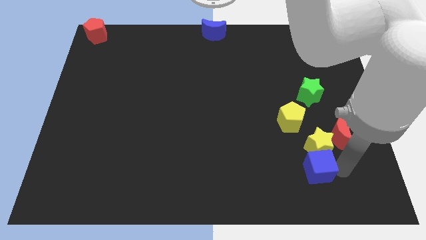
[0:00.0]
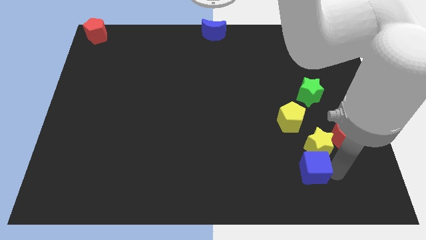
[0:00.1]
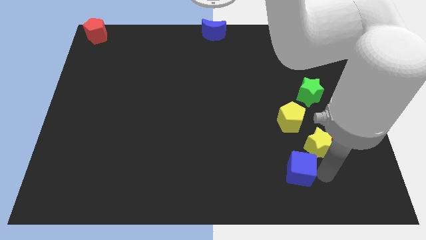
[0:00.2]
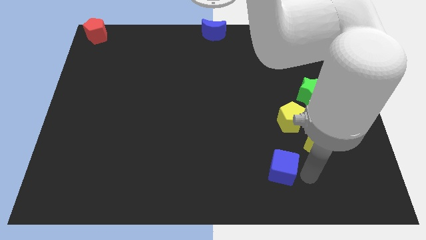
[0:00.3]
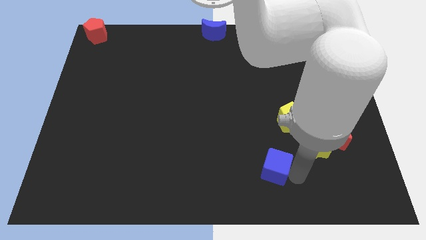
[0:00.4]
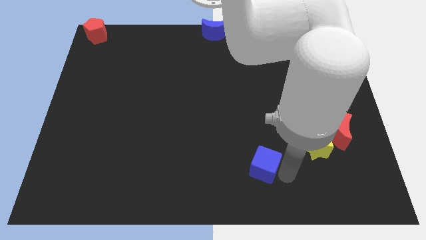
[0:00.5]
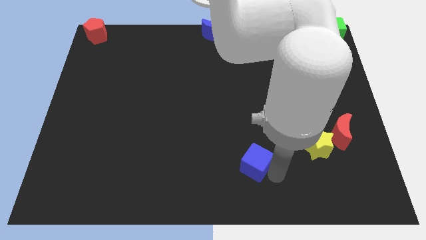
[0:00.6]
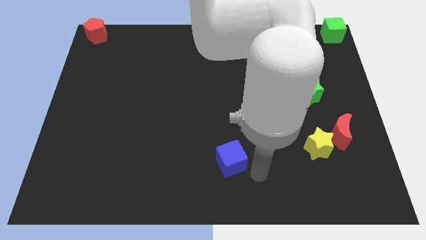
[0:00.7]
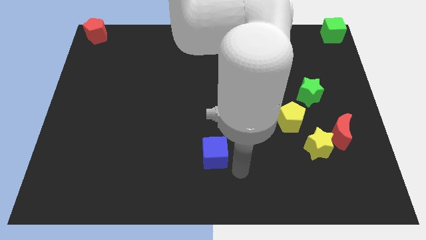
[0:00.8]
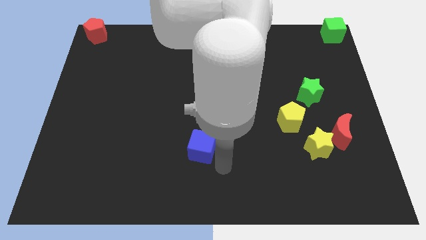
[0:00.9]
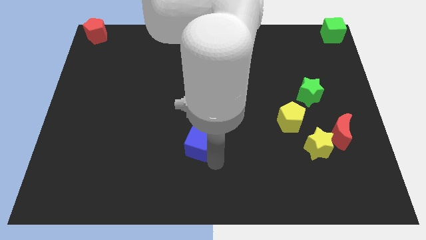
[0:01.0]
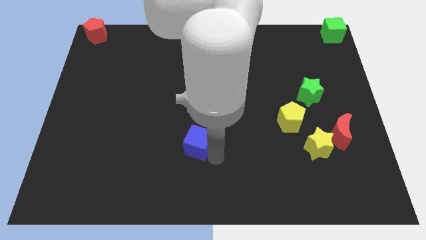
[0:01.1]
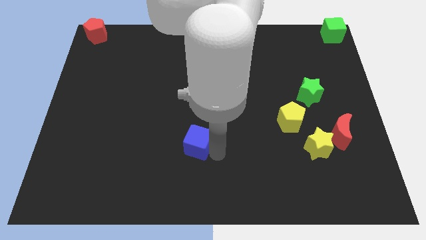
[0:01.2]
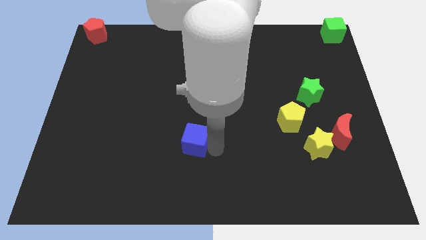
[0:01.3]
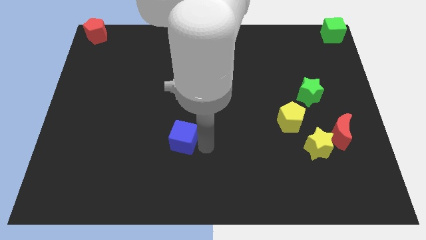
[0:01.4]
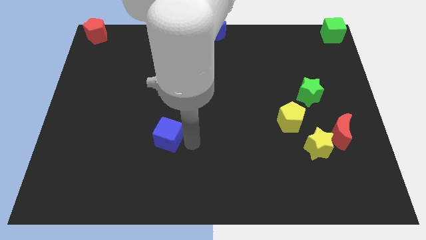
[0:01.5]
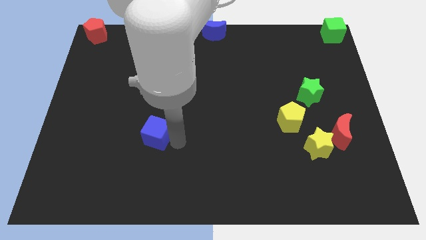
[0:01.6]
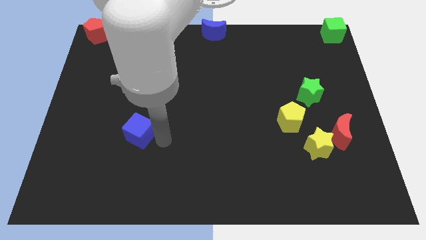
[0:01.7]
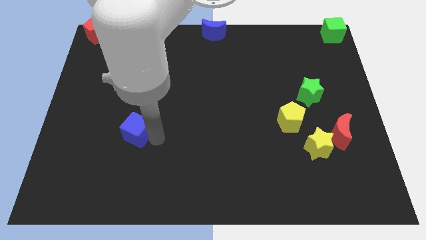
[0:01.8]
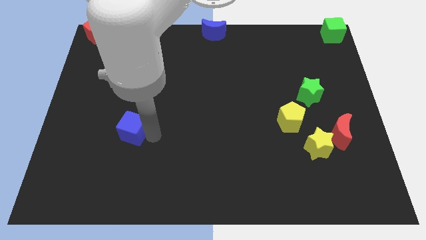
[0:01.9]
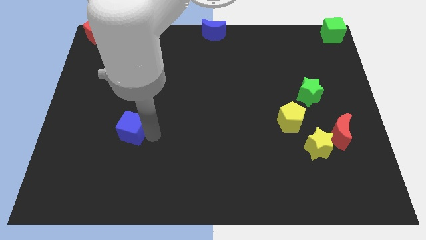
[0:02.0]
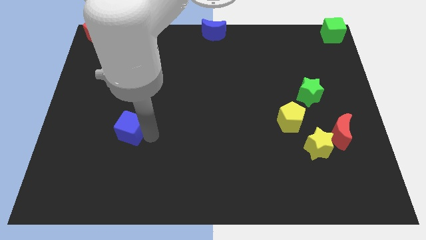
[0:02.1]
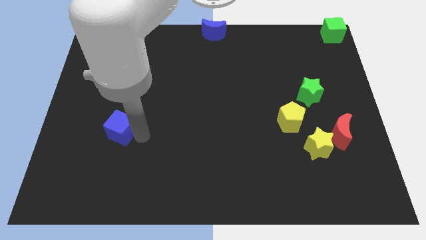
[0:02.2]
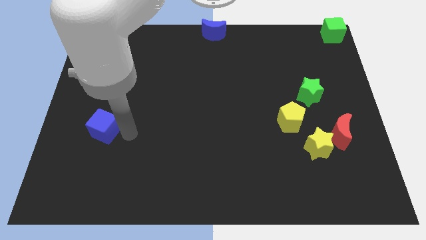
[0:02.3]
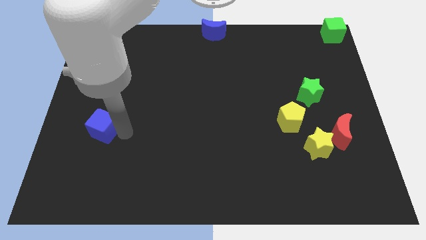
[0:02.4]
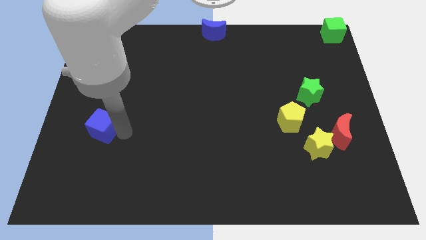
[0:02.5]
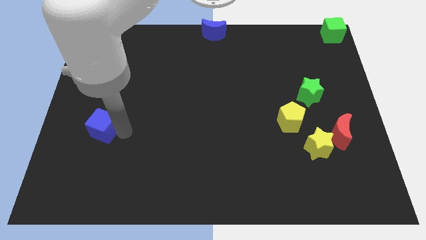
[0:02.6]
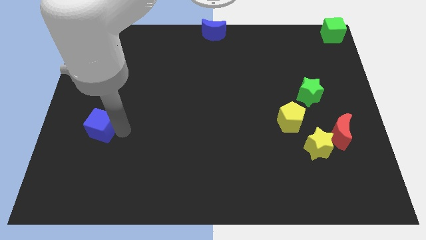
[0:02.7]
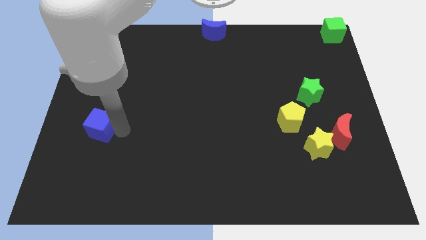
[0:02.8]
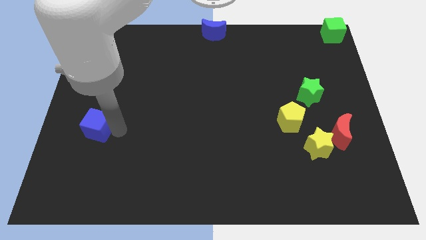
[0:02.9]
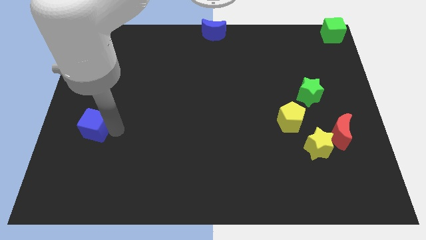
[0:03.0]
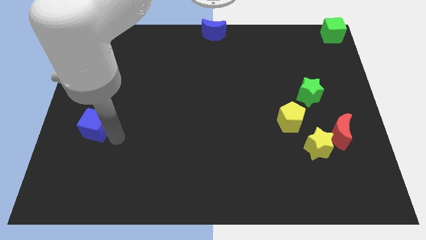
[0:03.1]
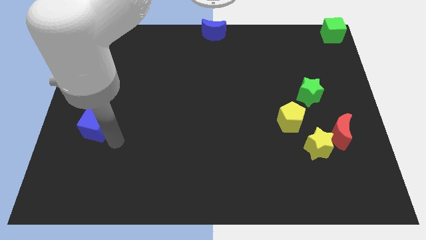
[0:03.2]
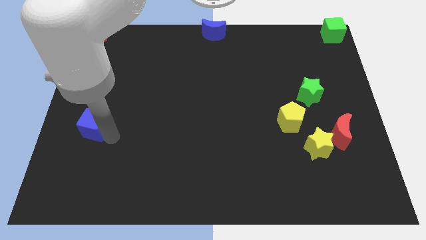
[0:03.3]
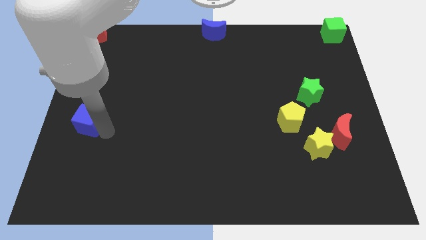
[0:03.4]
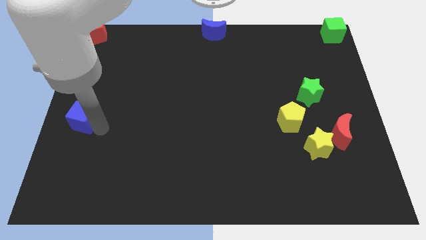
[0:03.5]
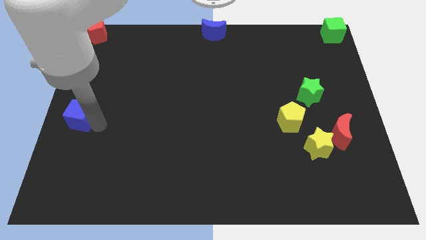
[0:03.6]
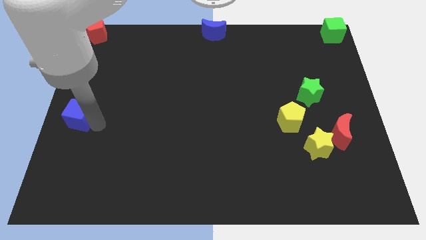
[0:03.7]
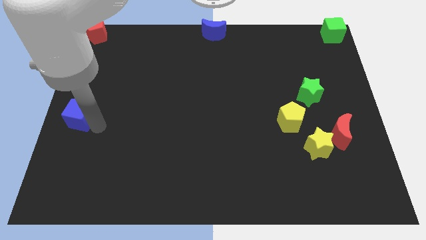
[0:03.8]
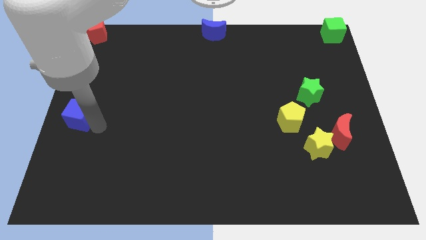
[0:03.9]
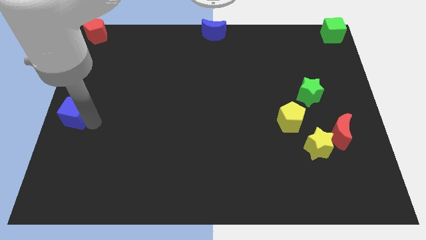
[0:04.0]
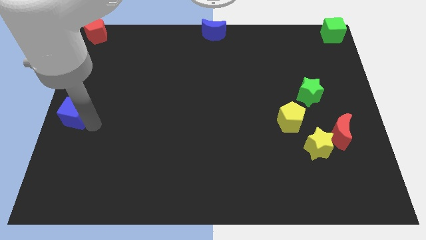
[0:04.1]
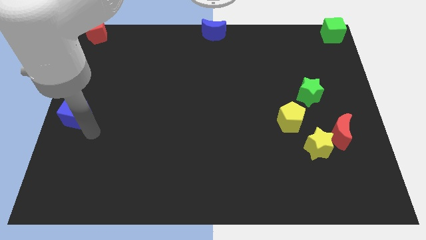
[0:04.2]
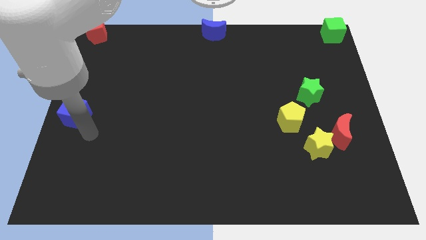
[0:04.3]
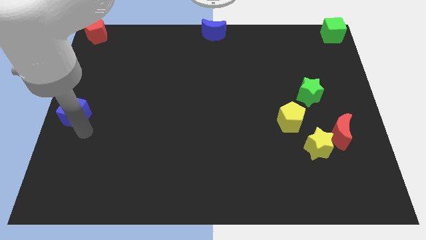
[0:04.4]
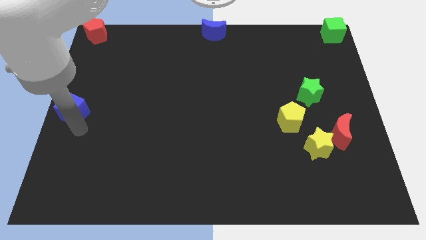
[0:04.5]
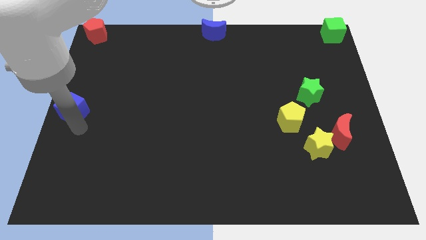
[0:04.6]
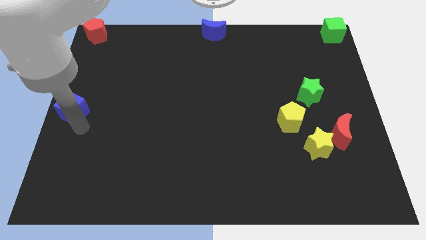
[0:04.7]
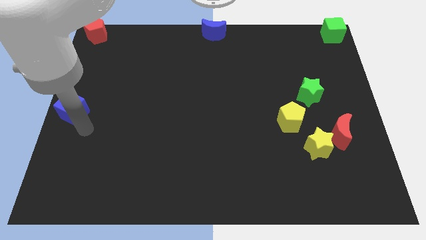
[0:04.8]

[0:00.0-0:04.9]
push the blue cube to the center left of the board

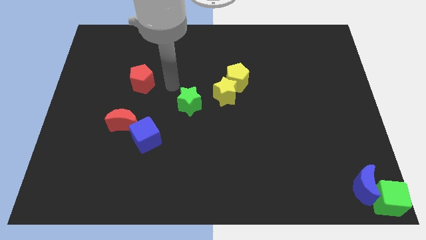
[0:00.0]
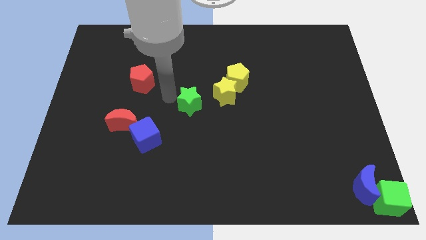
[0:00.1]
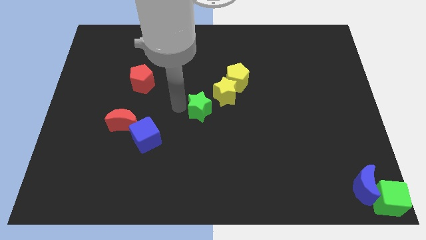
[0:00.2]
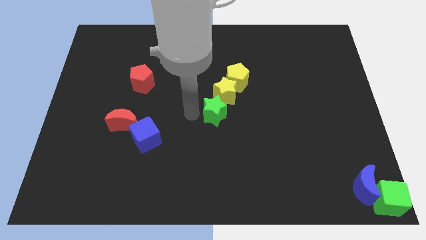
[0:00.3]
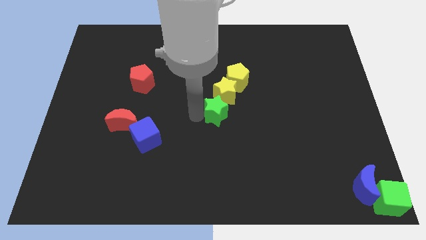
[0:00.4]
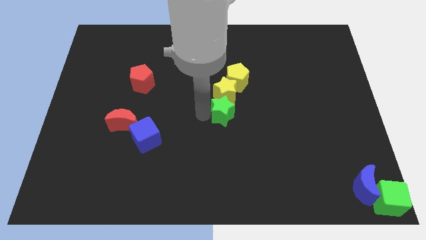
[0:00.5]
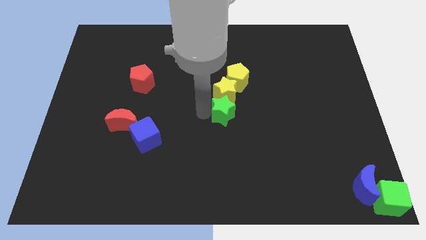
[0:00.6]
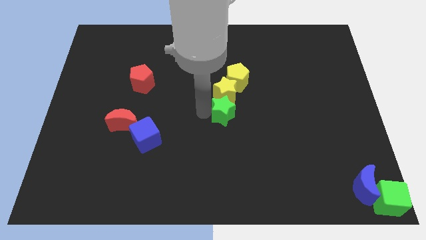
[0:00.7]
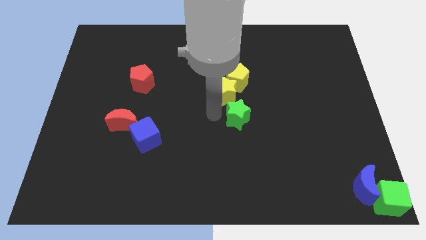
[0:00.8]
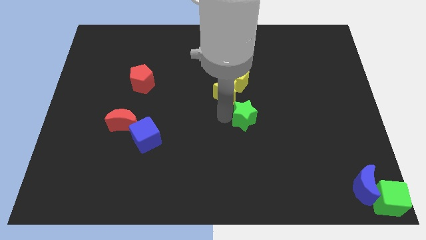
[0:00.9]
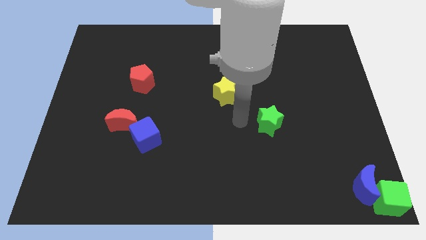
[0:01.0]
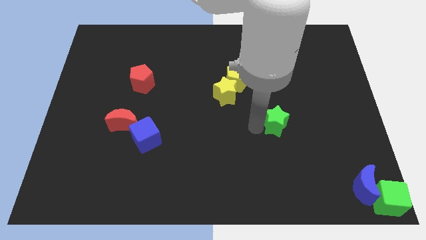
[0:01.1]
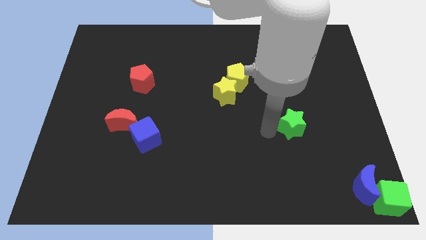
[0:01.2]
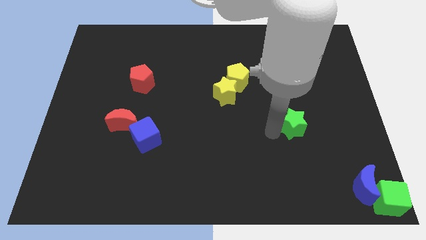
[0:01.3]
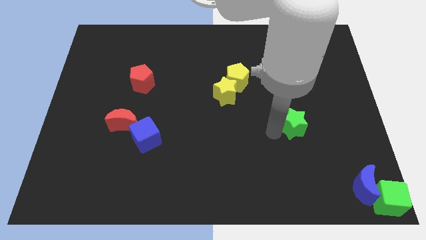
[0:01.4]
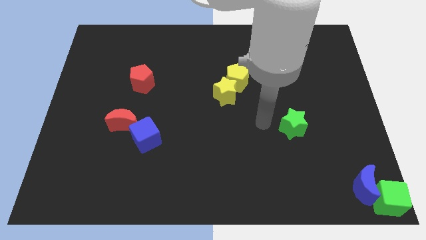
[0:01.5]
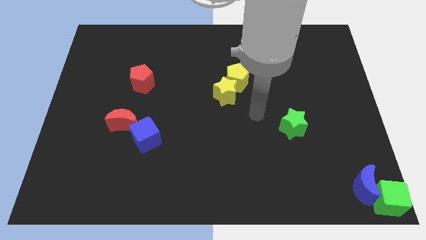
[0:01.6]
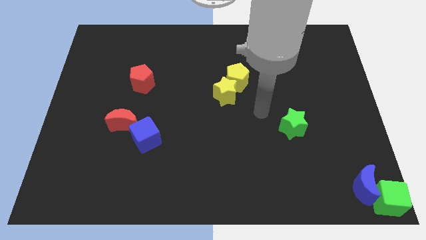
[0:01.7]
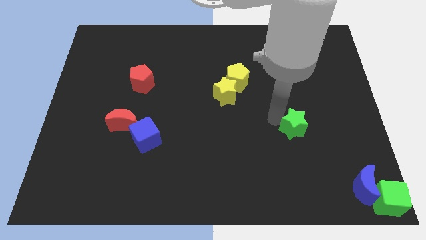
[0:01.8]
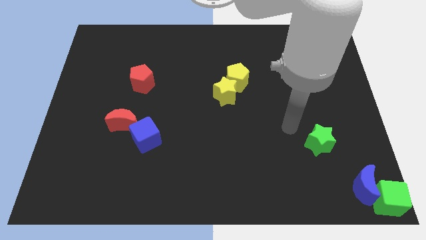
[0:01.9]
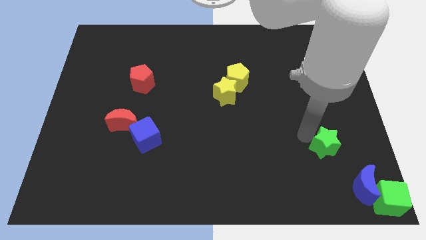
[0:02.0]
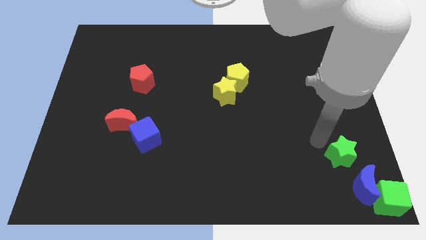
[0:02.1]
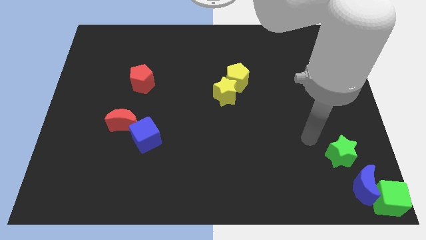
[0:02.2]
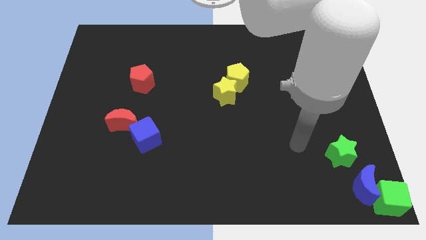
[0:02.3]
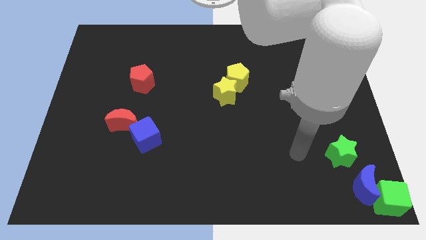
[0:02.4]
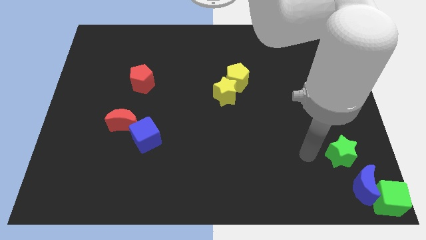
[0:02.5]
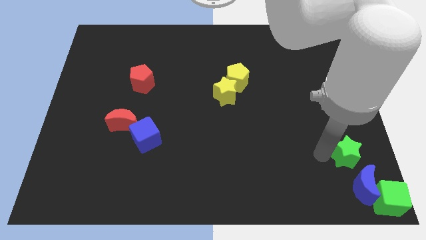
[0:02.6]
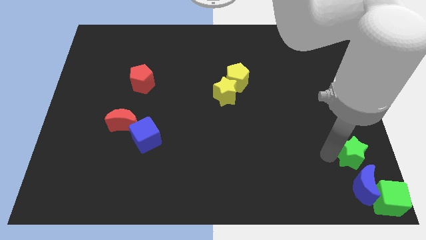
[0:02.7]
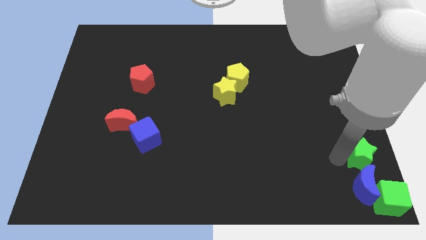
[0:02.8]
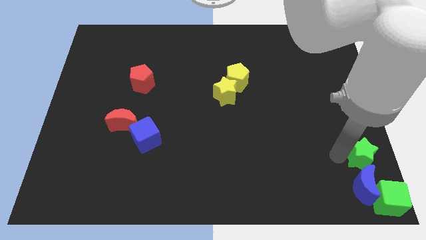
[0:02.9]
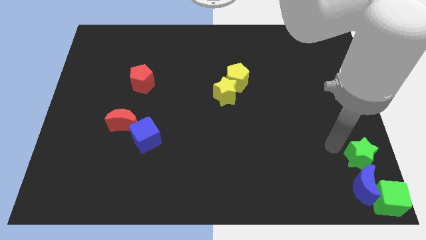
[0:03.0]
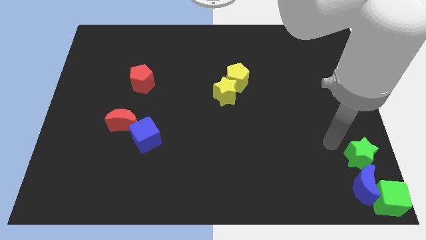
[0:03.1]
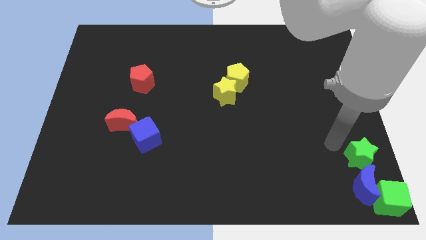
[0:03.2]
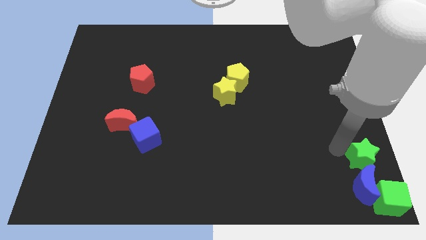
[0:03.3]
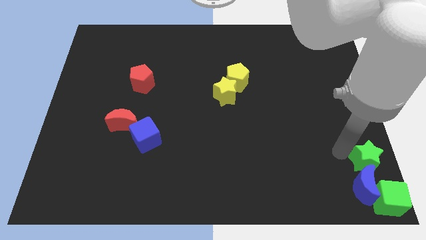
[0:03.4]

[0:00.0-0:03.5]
place the green star above the blue crescent

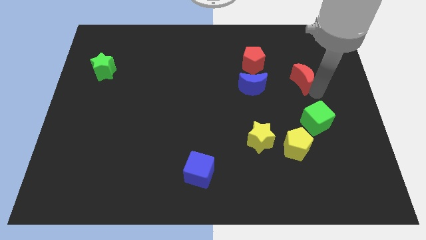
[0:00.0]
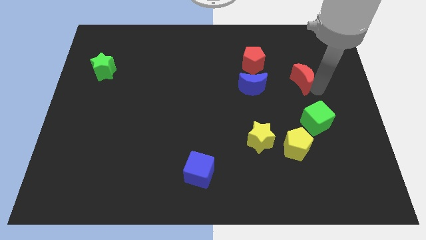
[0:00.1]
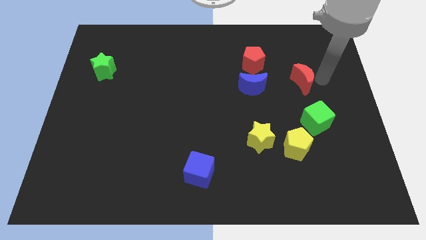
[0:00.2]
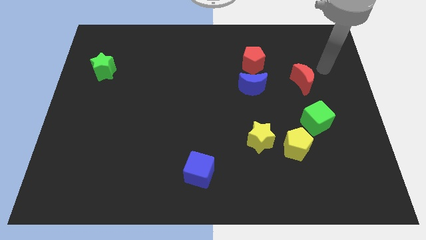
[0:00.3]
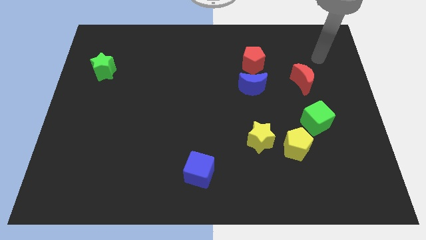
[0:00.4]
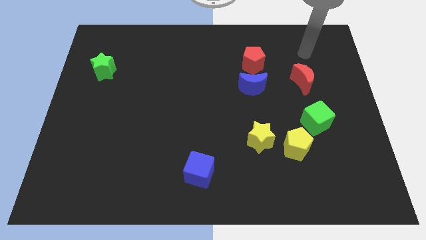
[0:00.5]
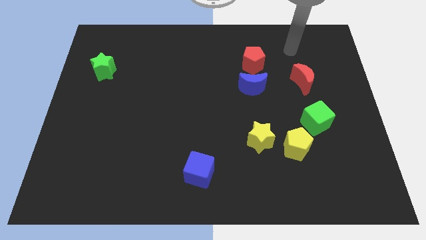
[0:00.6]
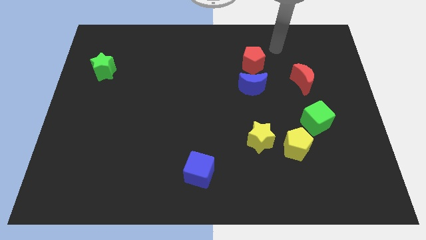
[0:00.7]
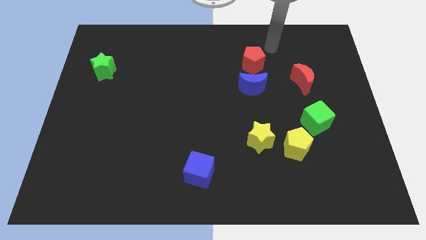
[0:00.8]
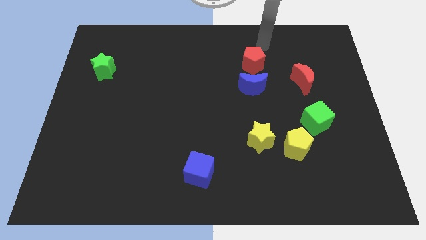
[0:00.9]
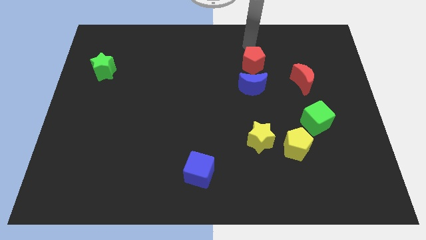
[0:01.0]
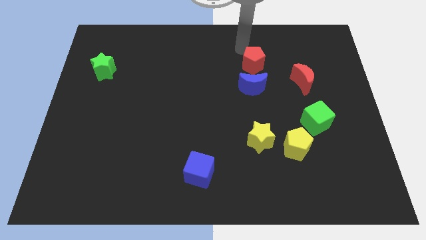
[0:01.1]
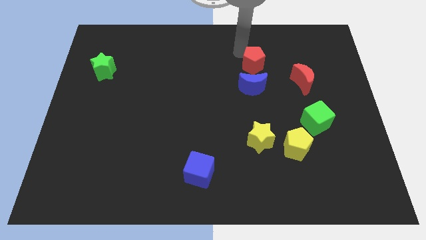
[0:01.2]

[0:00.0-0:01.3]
move your hand towards the top center of the board
